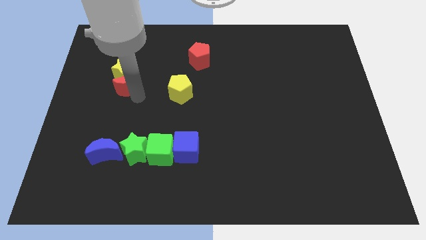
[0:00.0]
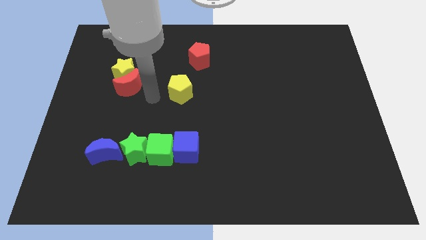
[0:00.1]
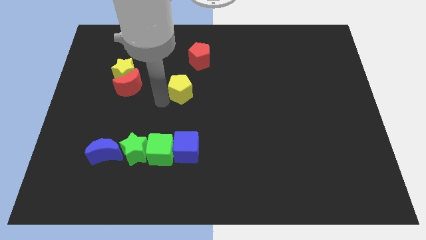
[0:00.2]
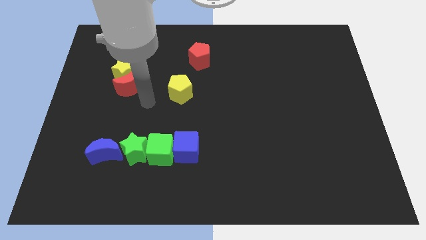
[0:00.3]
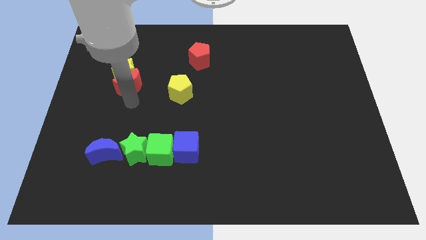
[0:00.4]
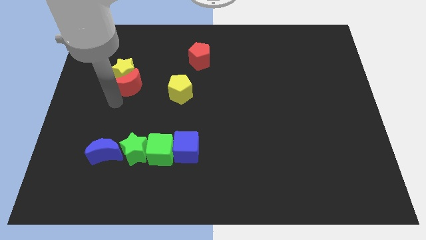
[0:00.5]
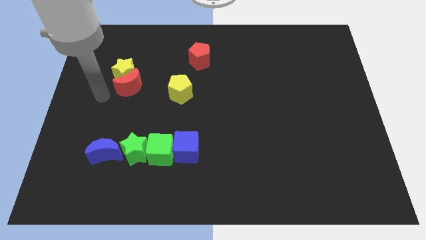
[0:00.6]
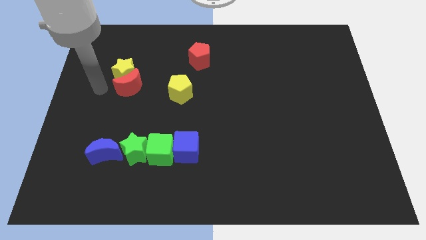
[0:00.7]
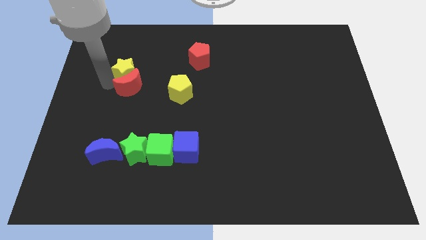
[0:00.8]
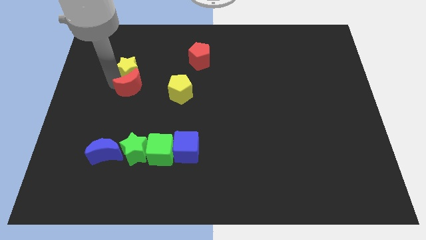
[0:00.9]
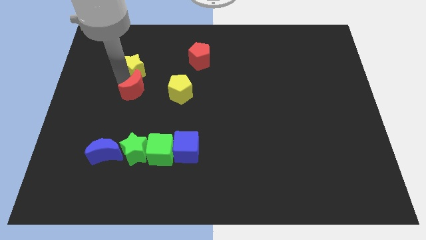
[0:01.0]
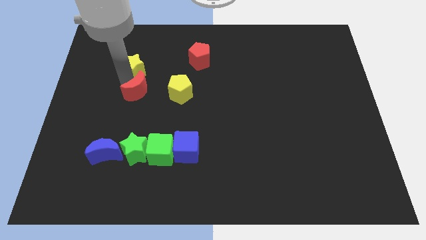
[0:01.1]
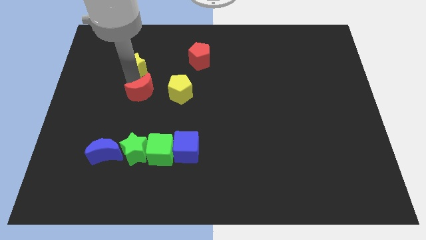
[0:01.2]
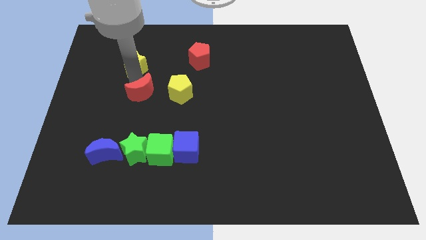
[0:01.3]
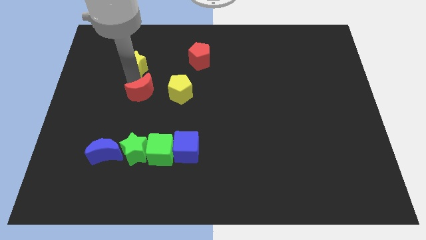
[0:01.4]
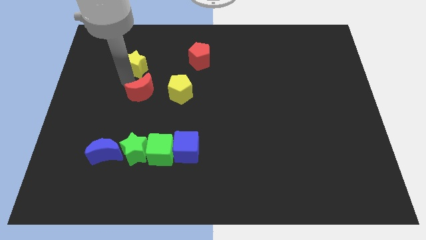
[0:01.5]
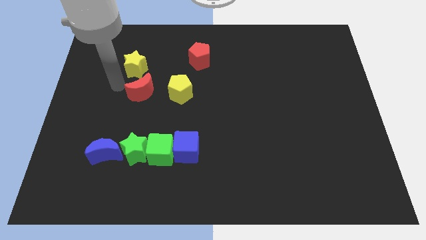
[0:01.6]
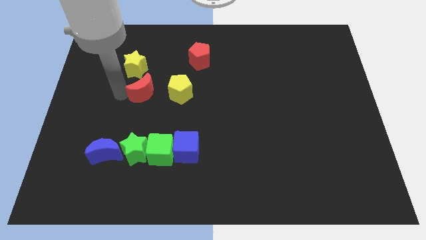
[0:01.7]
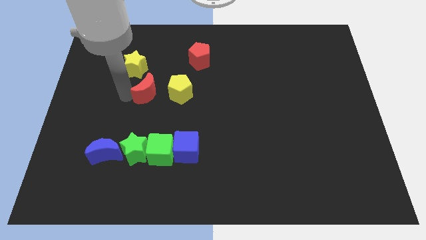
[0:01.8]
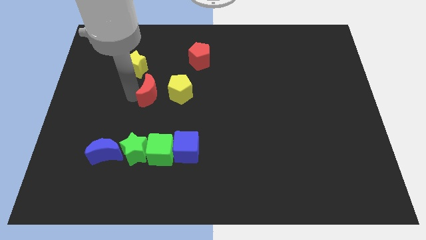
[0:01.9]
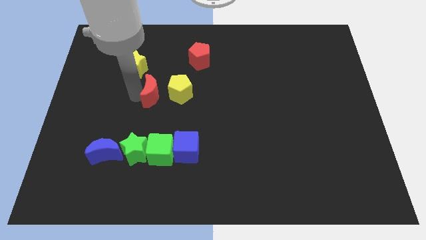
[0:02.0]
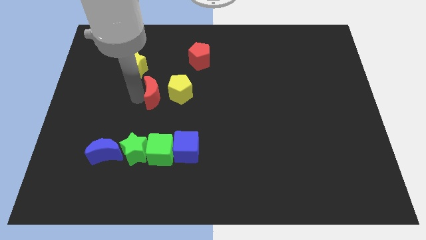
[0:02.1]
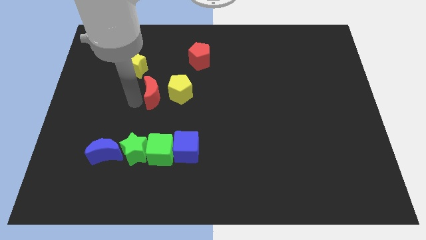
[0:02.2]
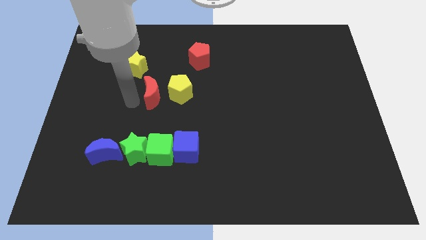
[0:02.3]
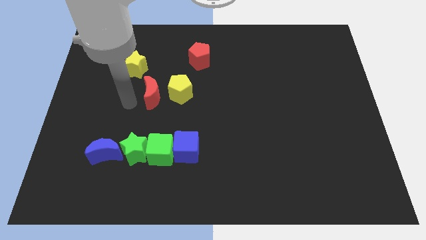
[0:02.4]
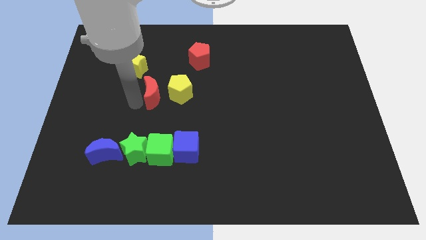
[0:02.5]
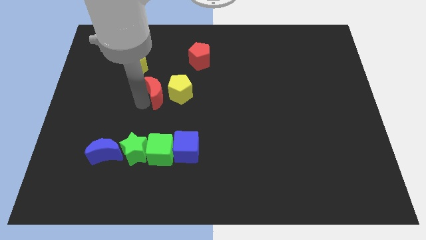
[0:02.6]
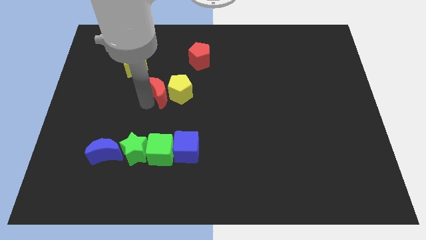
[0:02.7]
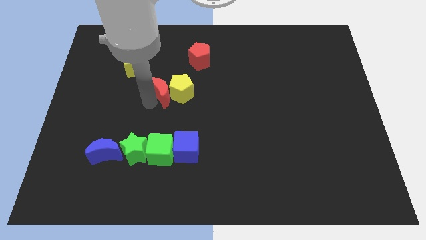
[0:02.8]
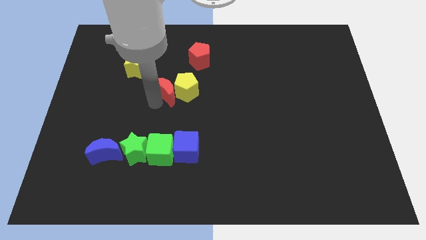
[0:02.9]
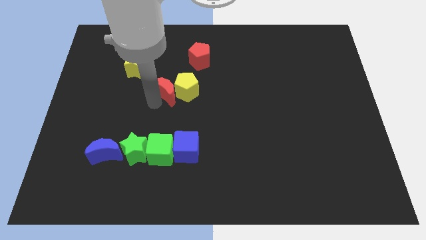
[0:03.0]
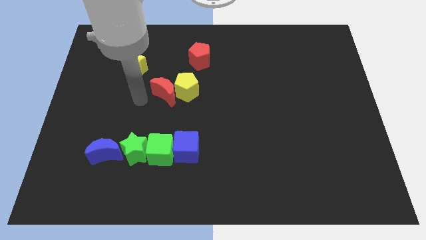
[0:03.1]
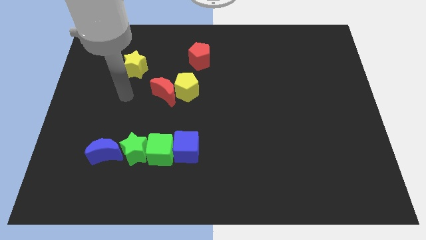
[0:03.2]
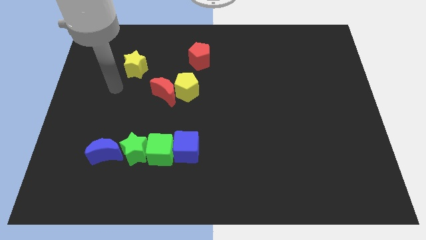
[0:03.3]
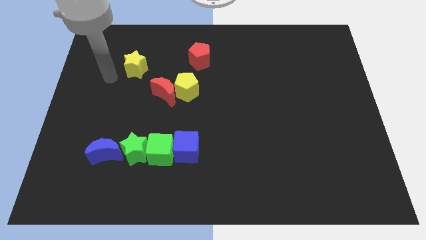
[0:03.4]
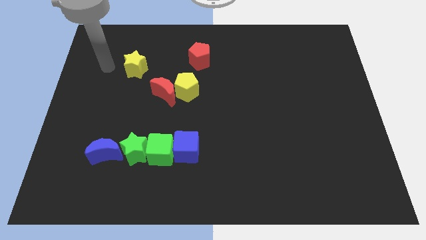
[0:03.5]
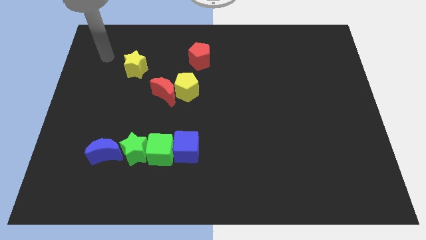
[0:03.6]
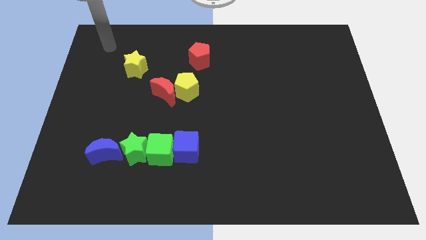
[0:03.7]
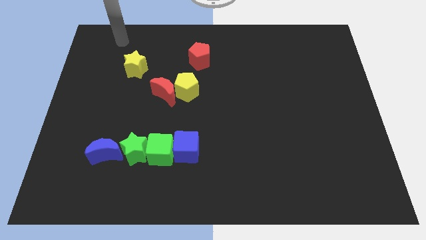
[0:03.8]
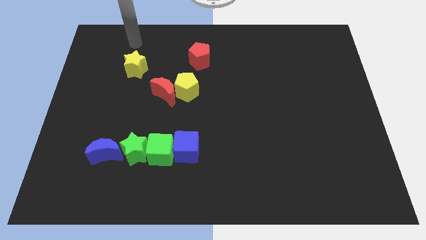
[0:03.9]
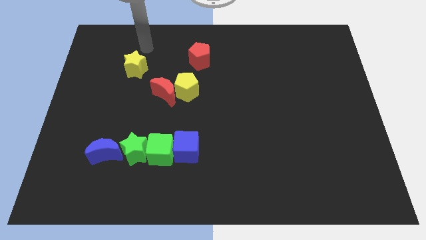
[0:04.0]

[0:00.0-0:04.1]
push the red crescent into the yellow pentagon towards the center of the board

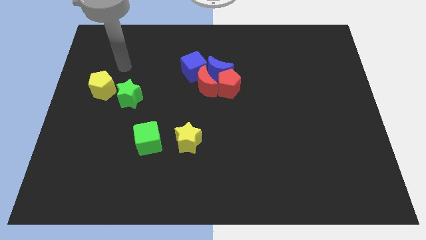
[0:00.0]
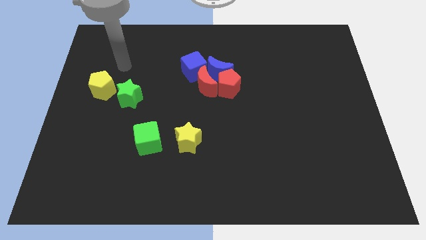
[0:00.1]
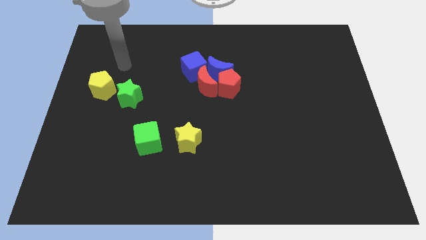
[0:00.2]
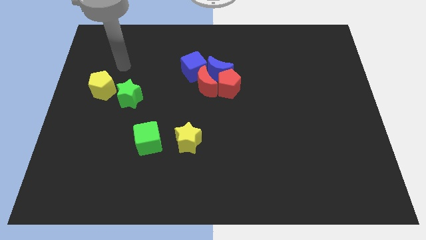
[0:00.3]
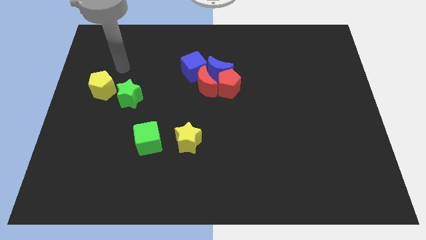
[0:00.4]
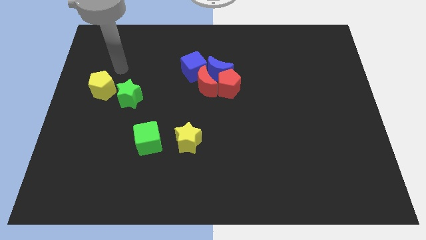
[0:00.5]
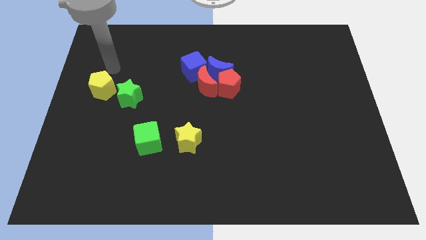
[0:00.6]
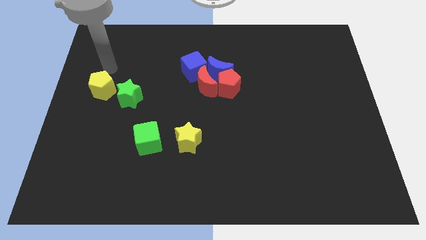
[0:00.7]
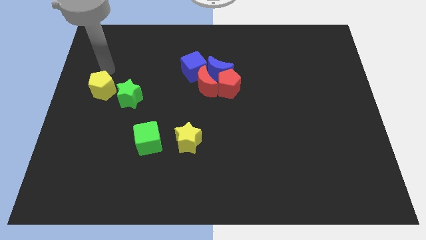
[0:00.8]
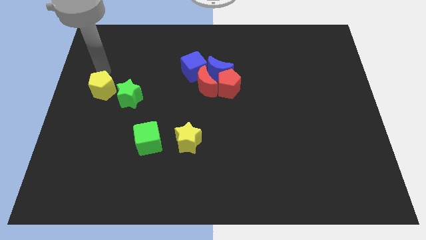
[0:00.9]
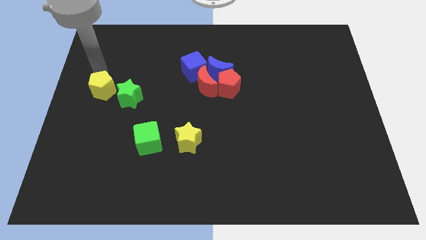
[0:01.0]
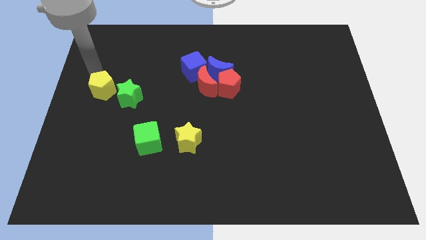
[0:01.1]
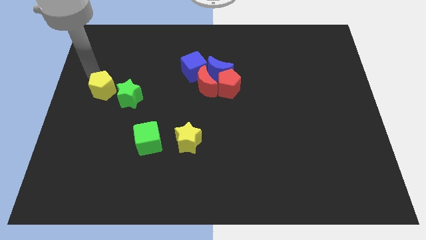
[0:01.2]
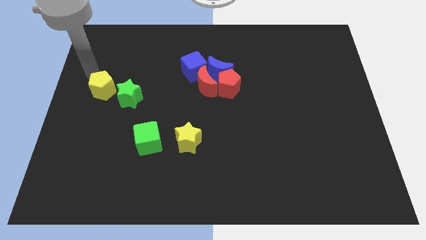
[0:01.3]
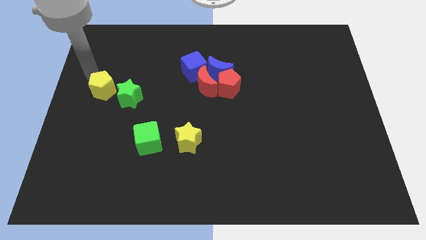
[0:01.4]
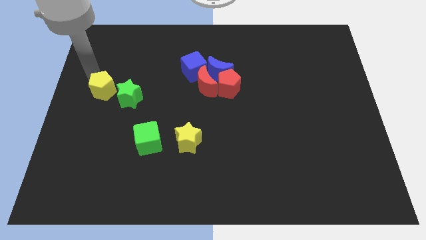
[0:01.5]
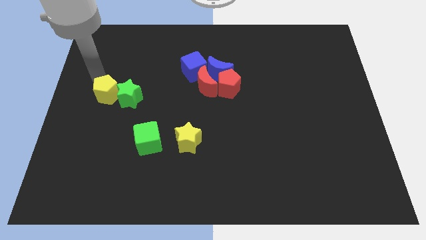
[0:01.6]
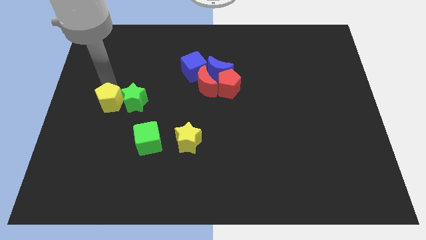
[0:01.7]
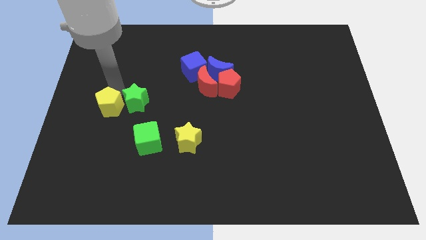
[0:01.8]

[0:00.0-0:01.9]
move the green star and yellow pentagon to bottom

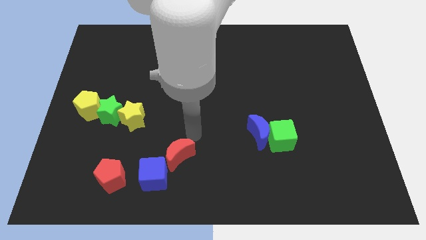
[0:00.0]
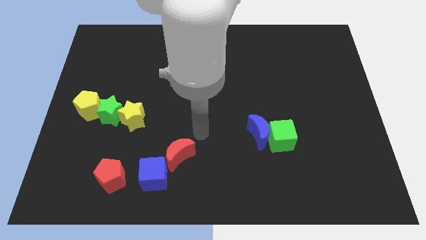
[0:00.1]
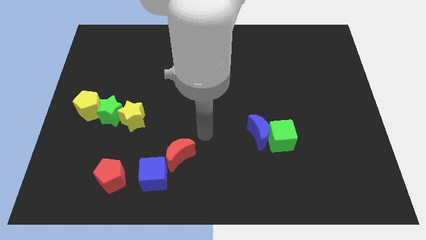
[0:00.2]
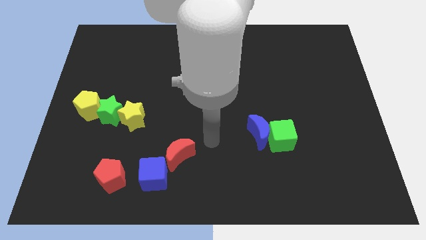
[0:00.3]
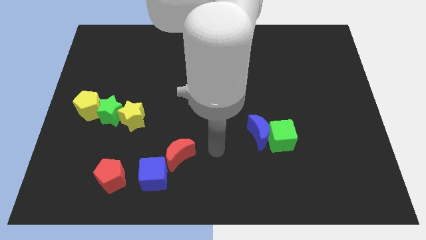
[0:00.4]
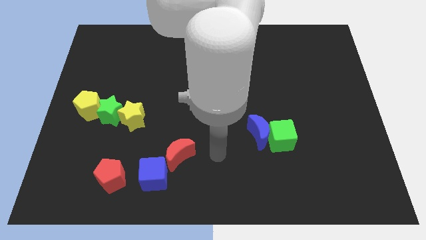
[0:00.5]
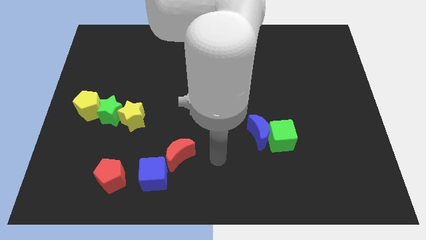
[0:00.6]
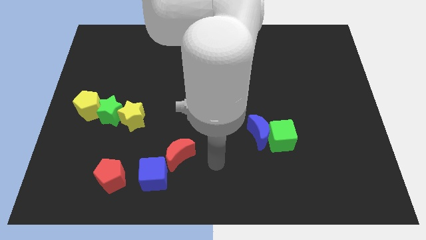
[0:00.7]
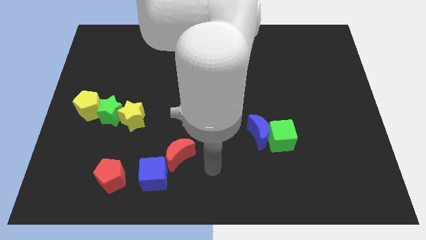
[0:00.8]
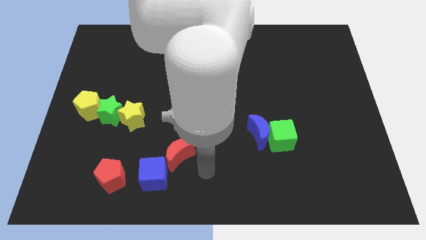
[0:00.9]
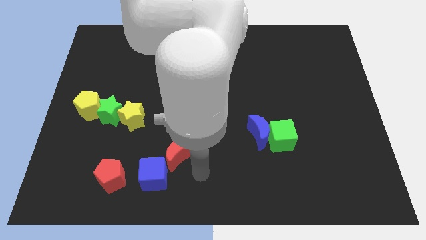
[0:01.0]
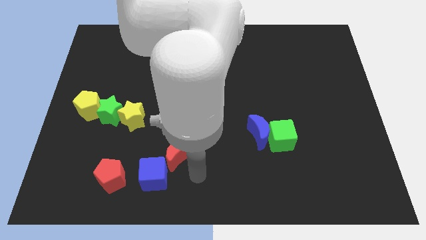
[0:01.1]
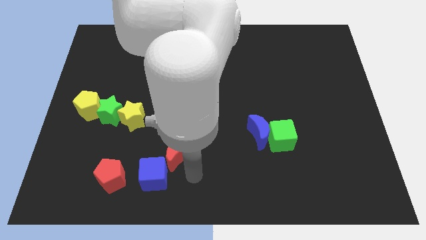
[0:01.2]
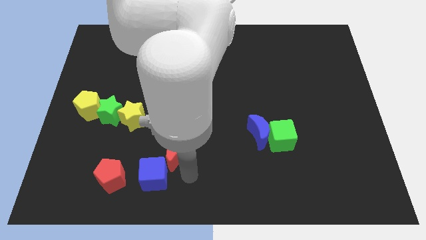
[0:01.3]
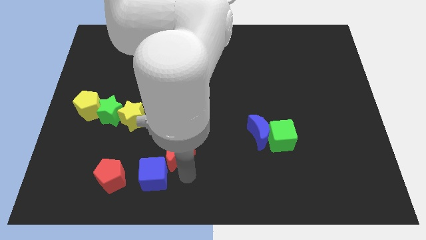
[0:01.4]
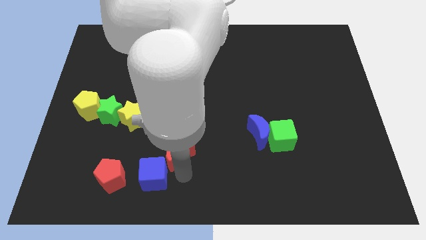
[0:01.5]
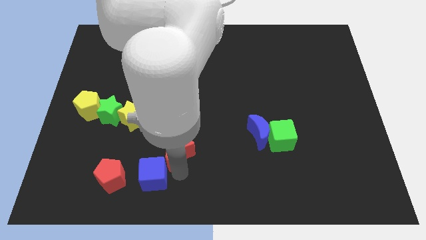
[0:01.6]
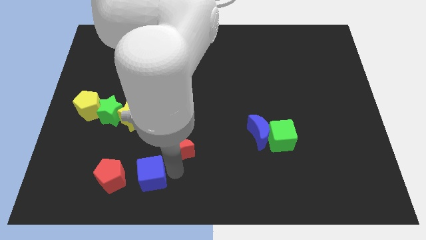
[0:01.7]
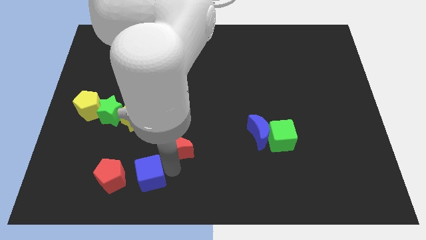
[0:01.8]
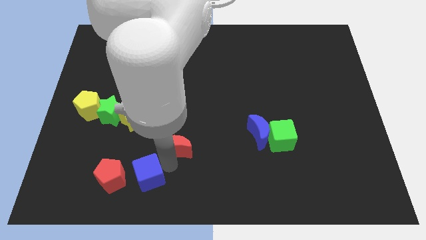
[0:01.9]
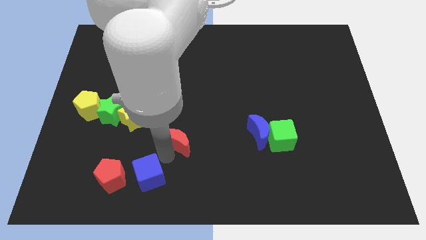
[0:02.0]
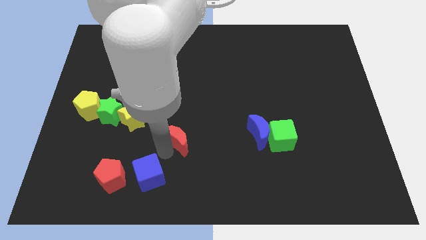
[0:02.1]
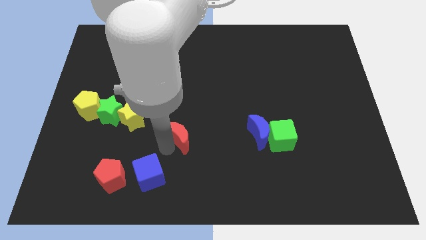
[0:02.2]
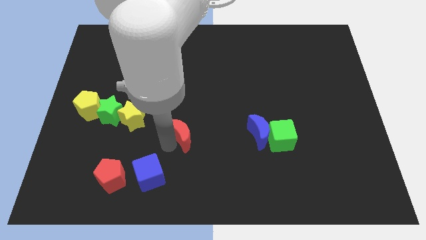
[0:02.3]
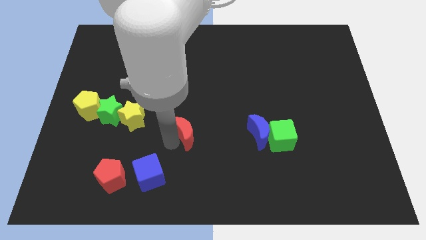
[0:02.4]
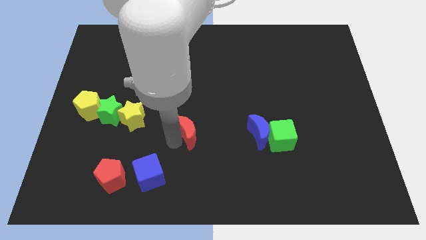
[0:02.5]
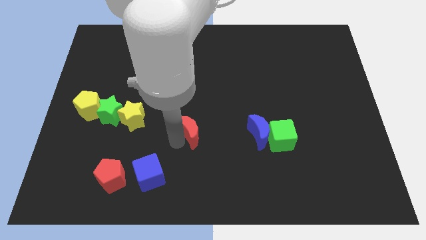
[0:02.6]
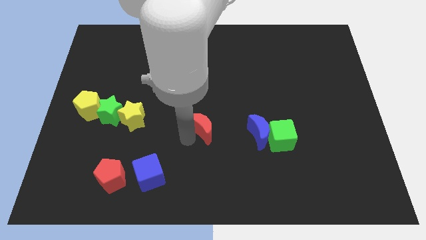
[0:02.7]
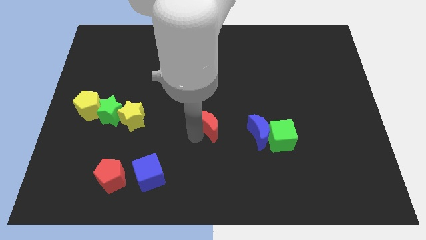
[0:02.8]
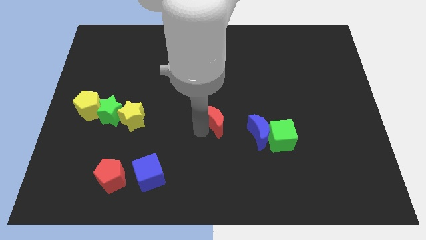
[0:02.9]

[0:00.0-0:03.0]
push the red crescent to the left of the blue crescent
